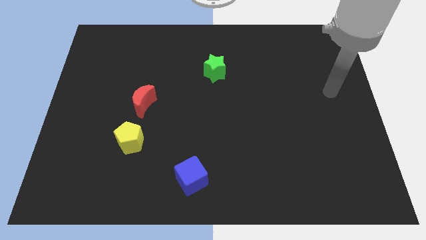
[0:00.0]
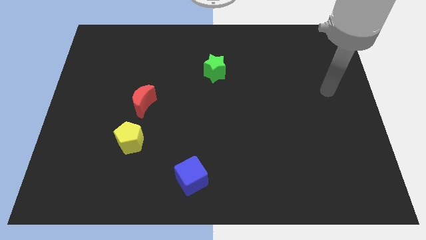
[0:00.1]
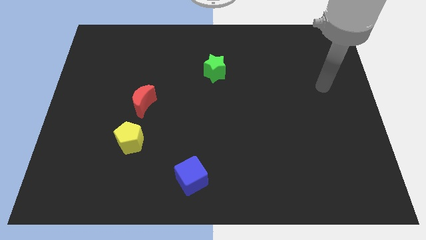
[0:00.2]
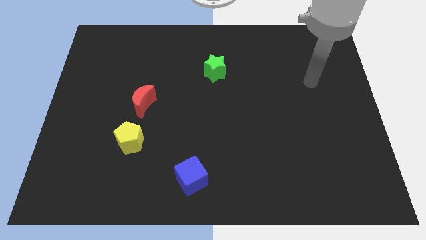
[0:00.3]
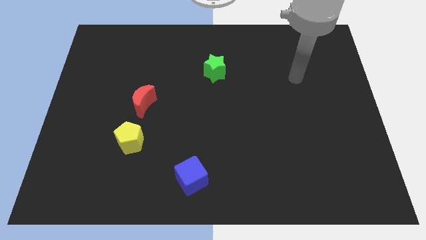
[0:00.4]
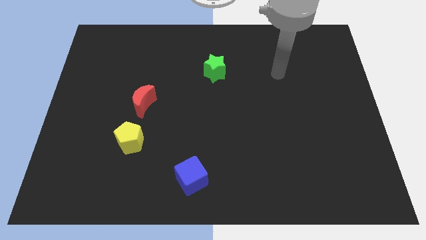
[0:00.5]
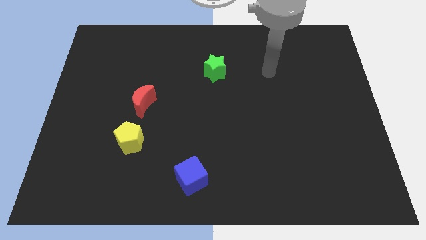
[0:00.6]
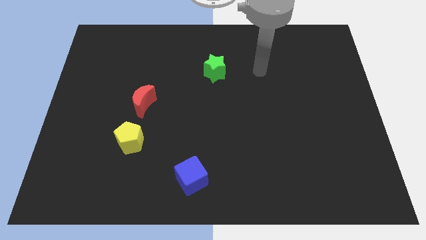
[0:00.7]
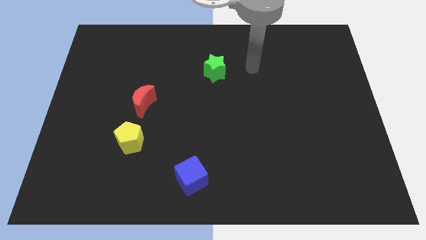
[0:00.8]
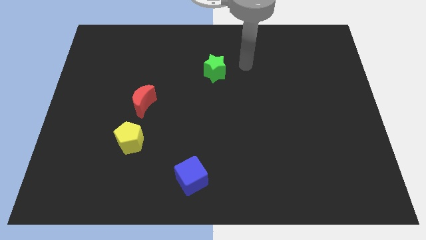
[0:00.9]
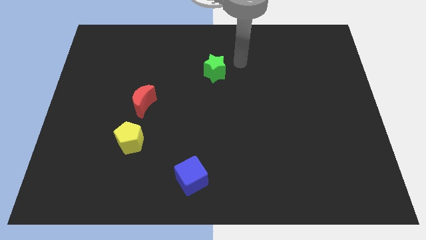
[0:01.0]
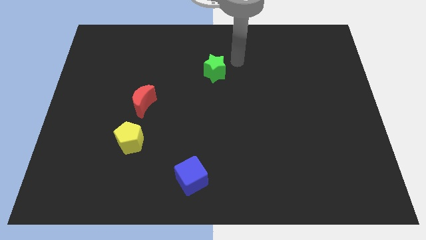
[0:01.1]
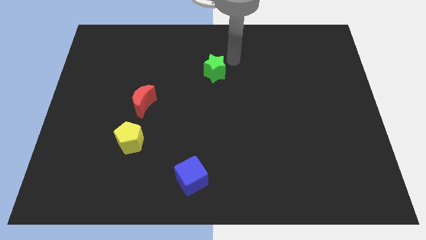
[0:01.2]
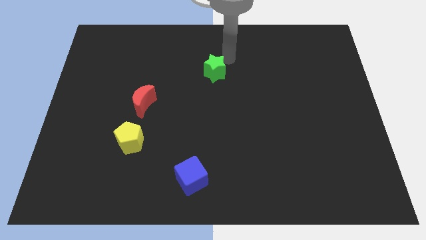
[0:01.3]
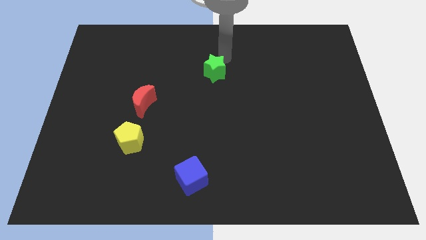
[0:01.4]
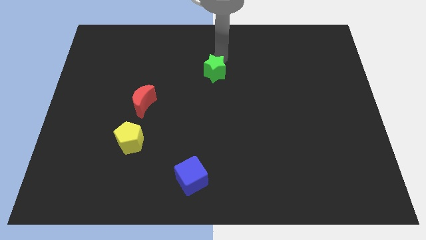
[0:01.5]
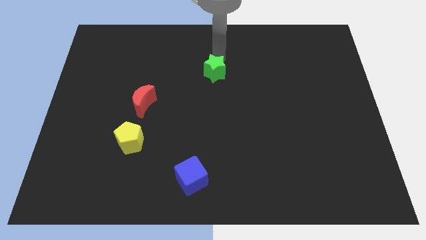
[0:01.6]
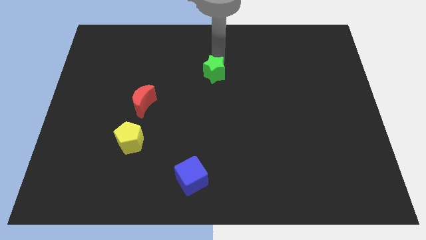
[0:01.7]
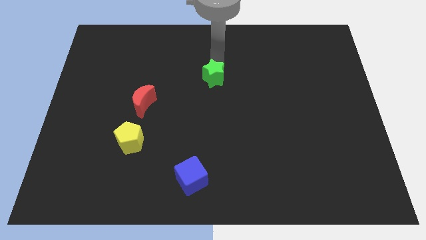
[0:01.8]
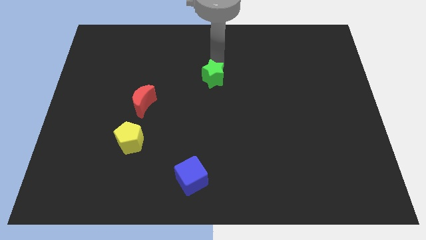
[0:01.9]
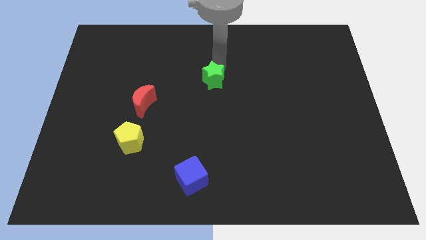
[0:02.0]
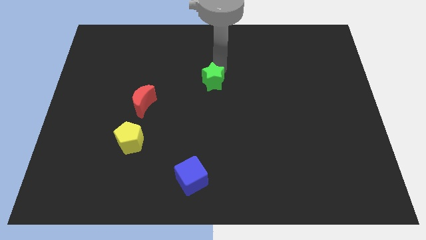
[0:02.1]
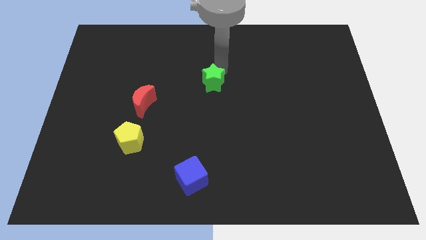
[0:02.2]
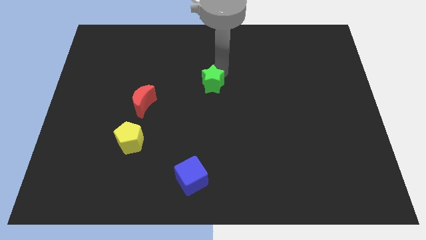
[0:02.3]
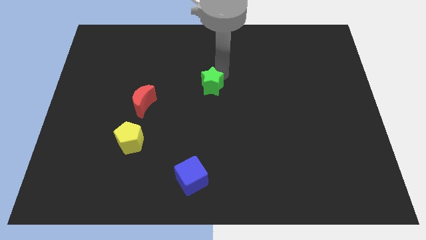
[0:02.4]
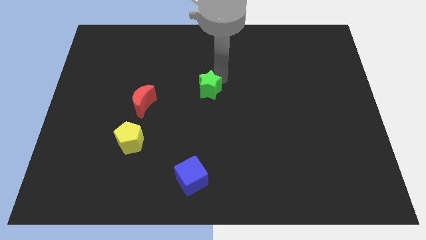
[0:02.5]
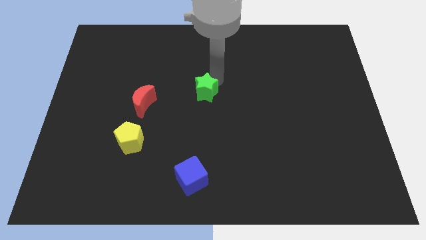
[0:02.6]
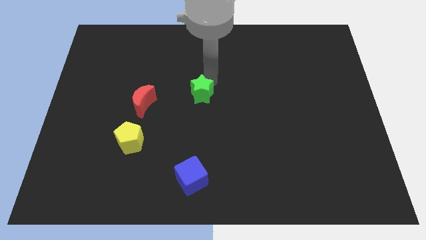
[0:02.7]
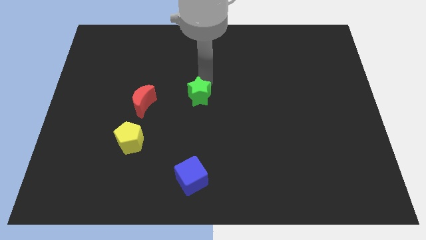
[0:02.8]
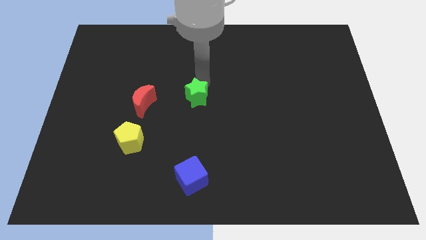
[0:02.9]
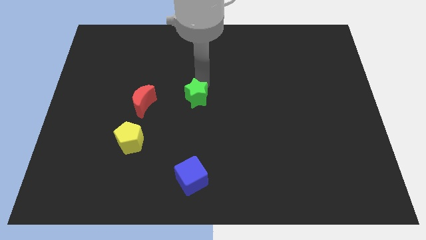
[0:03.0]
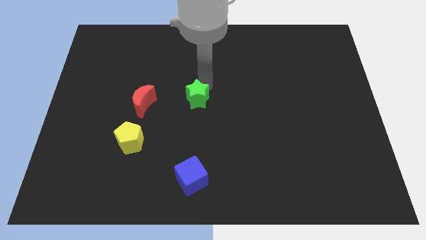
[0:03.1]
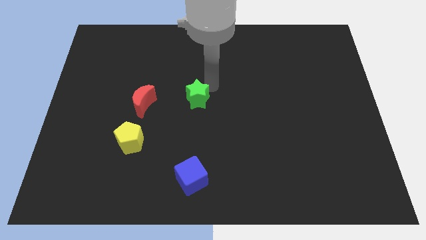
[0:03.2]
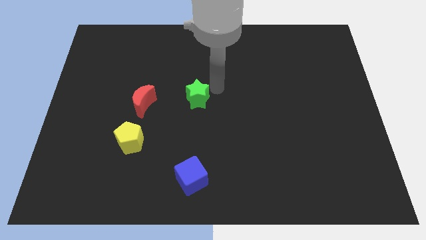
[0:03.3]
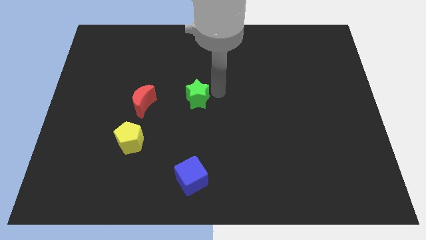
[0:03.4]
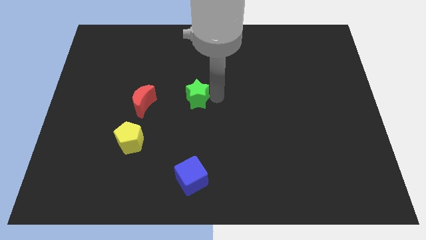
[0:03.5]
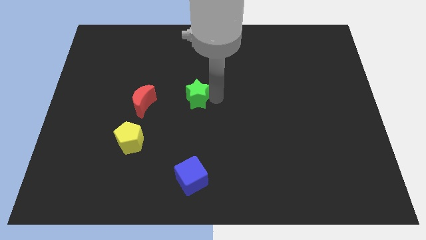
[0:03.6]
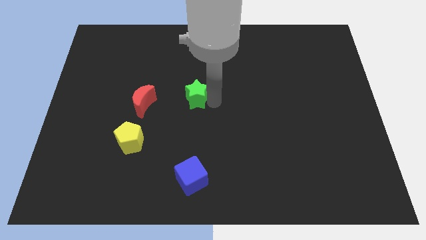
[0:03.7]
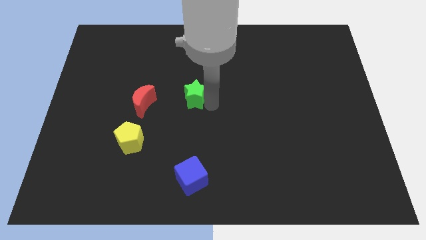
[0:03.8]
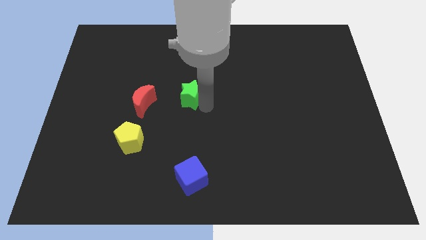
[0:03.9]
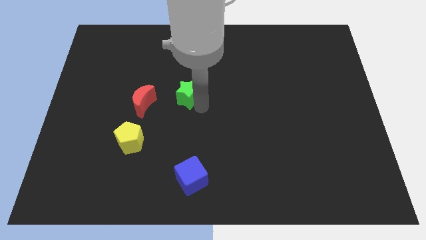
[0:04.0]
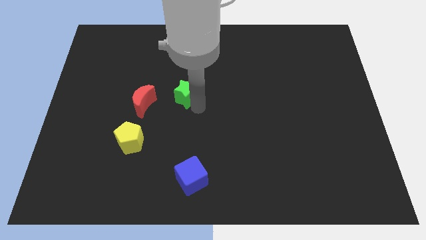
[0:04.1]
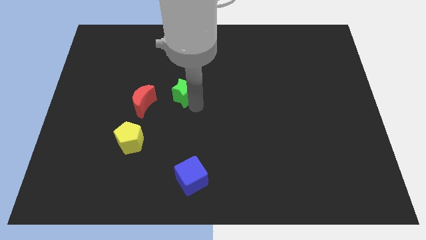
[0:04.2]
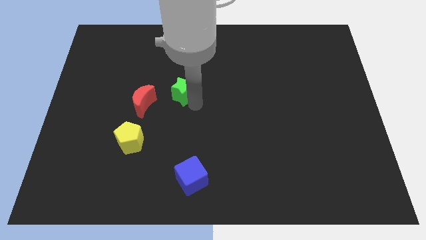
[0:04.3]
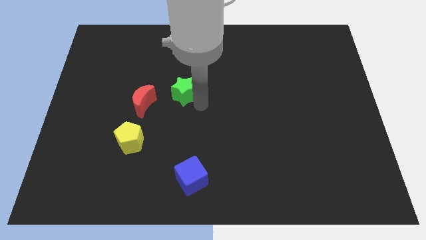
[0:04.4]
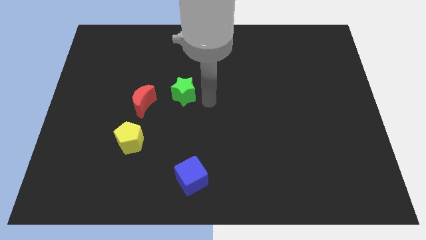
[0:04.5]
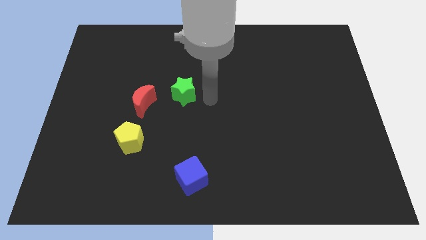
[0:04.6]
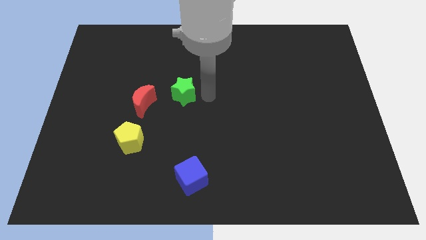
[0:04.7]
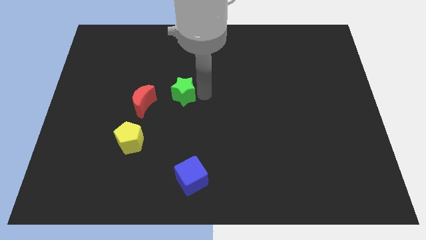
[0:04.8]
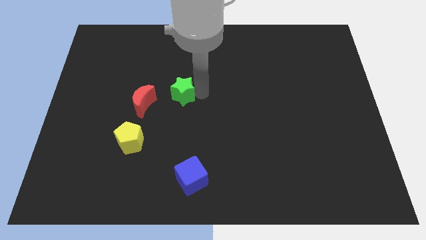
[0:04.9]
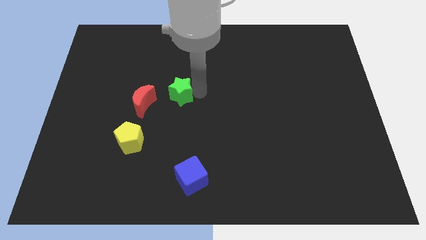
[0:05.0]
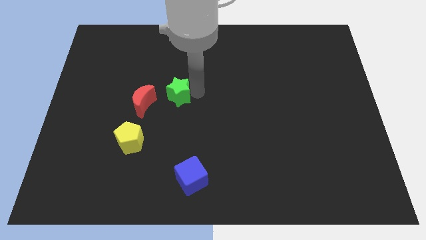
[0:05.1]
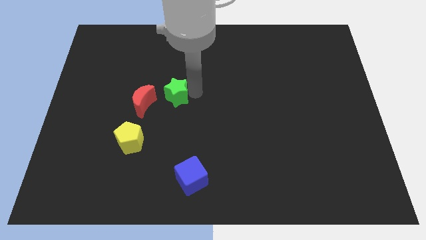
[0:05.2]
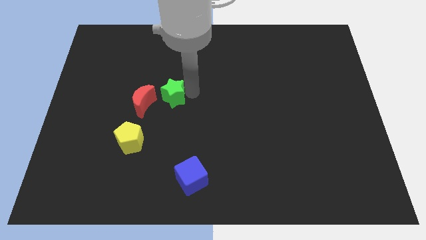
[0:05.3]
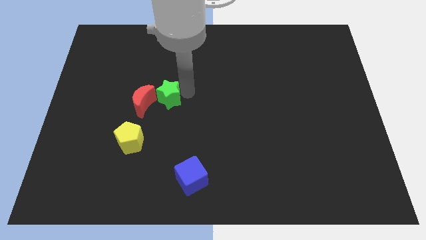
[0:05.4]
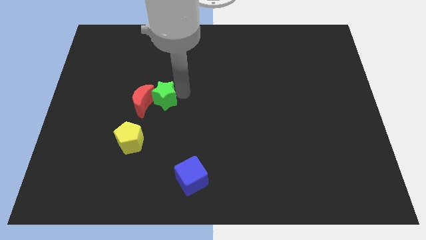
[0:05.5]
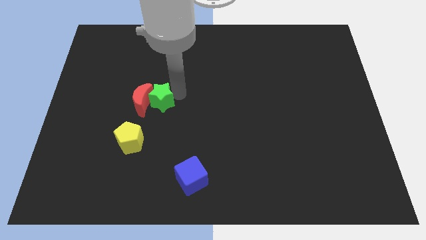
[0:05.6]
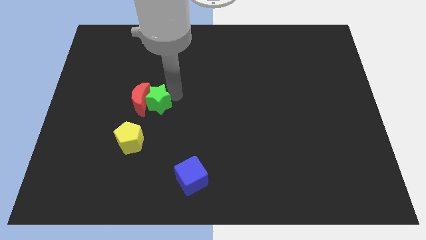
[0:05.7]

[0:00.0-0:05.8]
put the green block next to the moon

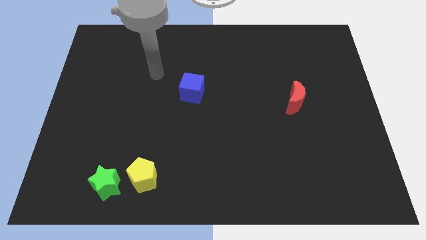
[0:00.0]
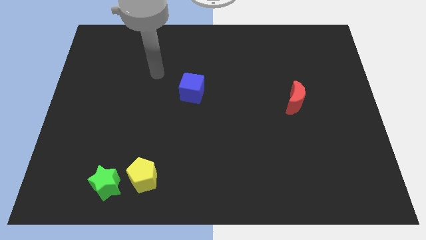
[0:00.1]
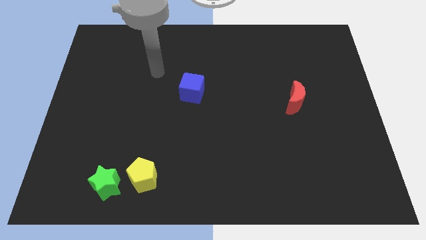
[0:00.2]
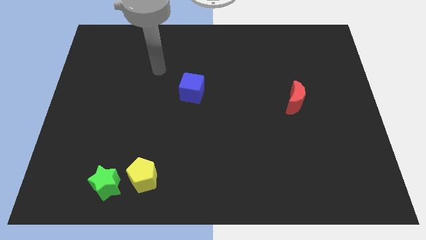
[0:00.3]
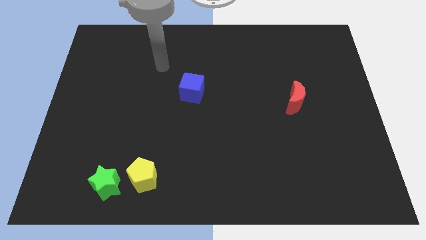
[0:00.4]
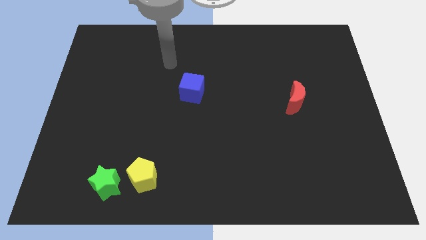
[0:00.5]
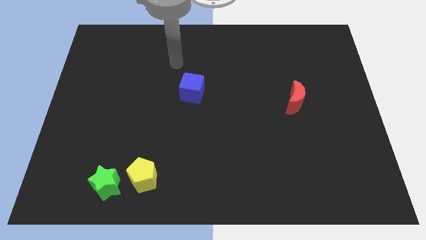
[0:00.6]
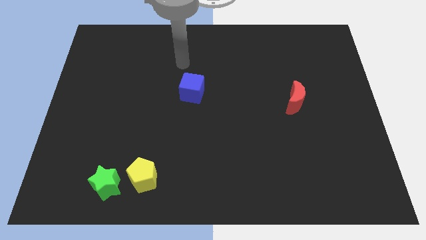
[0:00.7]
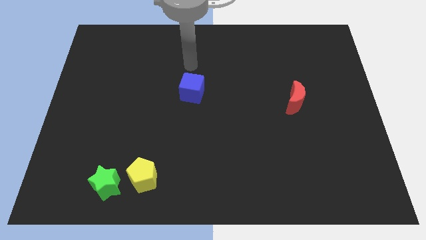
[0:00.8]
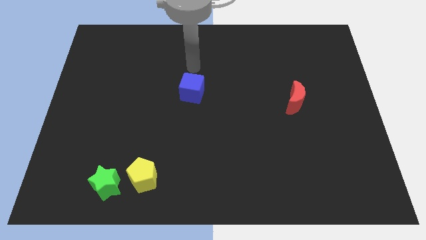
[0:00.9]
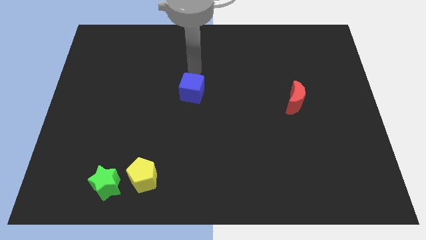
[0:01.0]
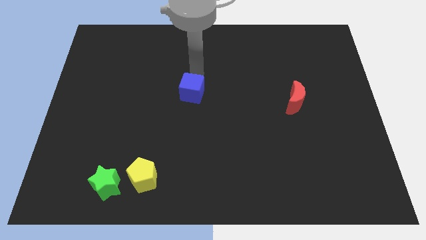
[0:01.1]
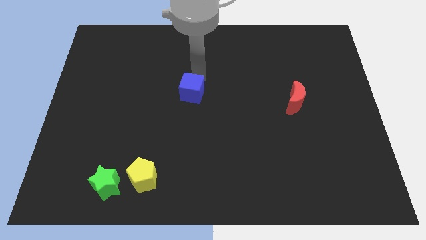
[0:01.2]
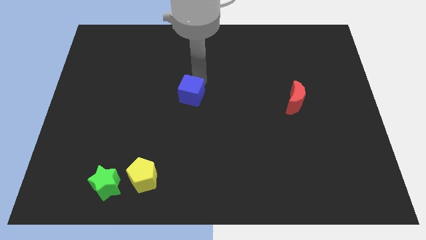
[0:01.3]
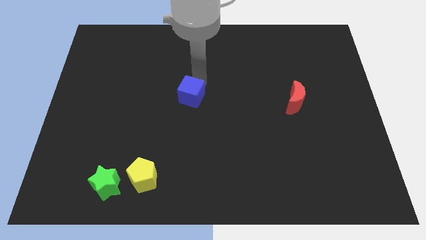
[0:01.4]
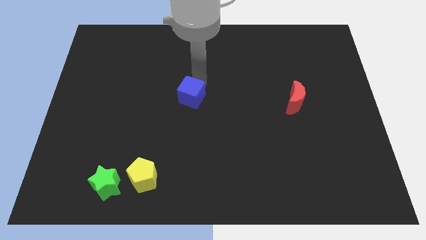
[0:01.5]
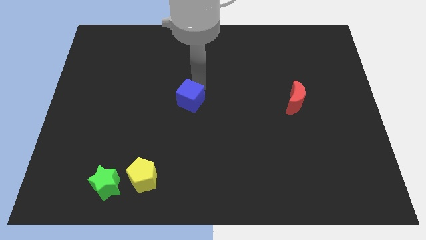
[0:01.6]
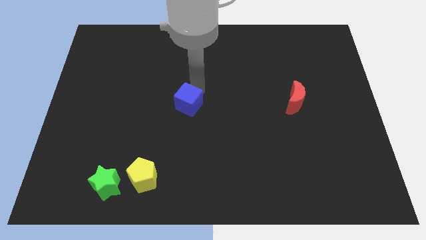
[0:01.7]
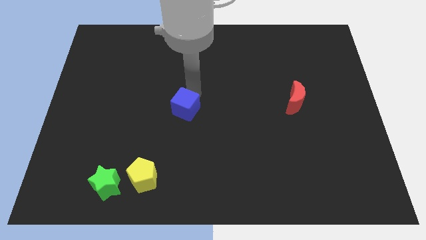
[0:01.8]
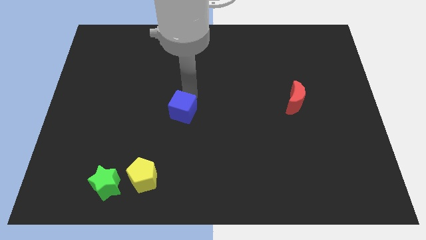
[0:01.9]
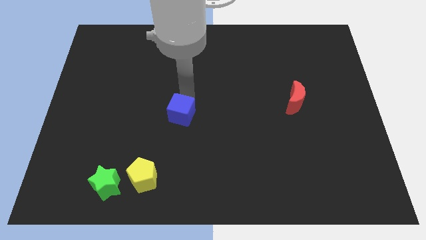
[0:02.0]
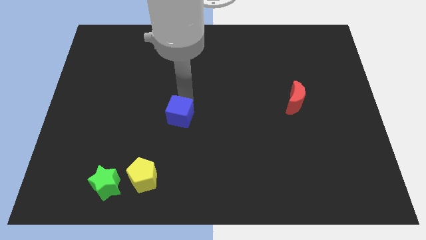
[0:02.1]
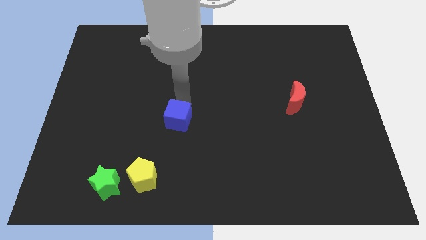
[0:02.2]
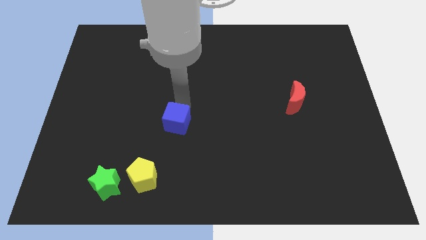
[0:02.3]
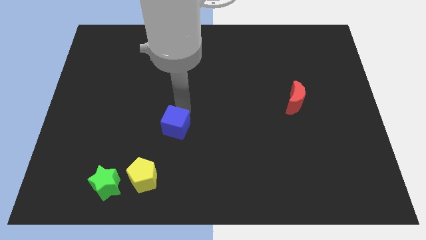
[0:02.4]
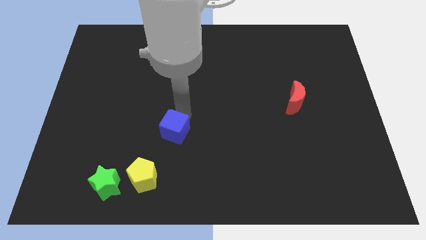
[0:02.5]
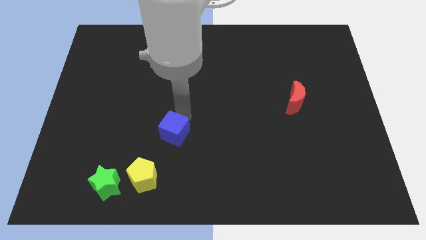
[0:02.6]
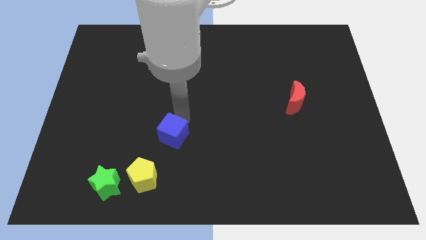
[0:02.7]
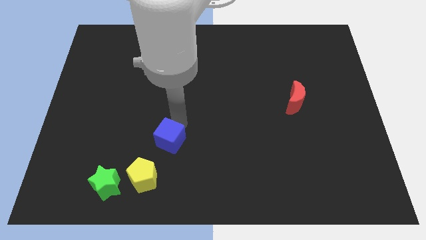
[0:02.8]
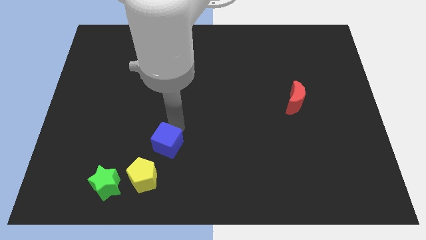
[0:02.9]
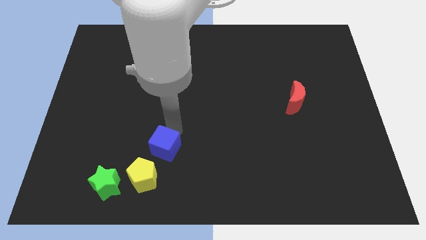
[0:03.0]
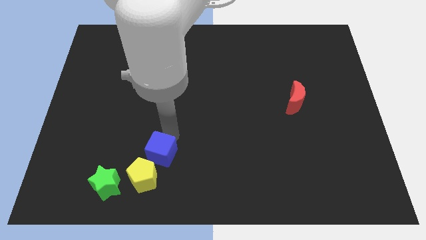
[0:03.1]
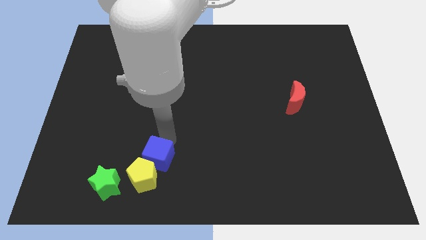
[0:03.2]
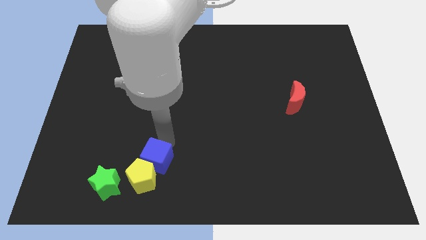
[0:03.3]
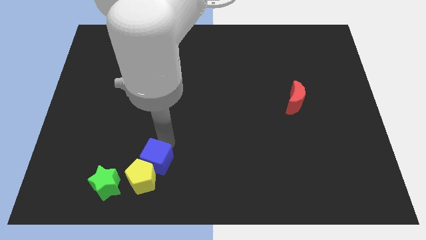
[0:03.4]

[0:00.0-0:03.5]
slide the blue block next to the pentagon
